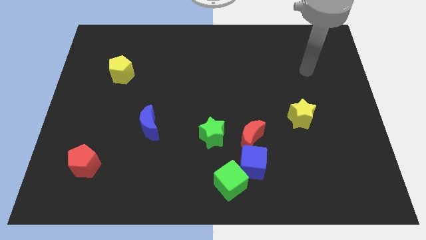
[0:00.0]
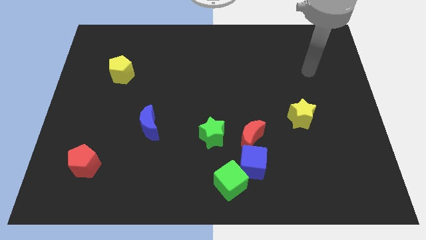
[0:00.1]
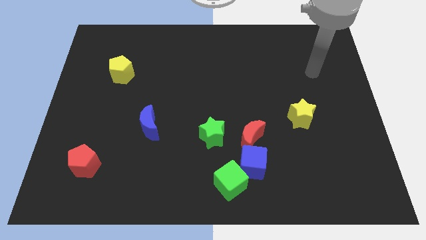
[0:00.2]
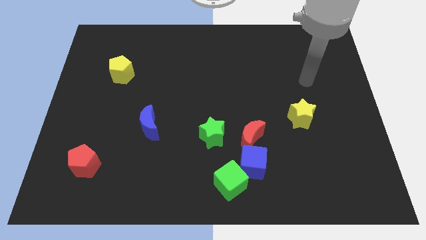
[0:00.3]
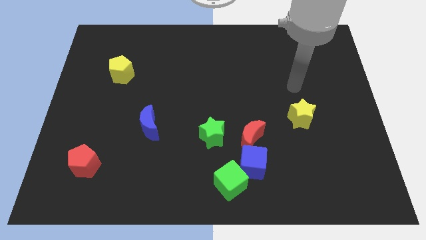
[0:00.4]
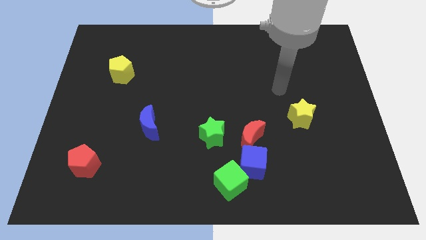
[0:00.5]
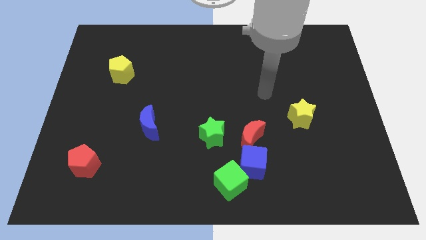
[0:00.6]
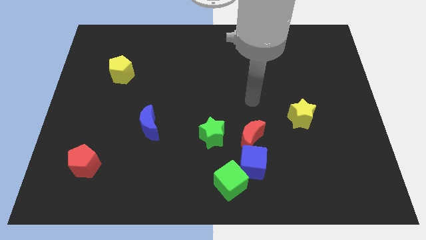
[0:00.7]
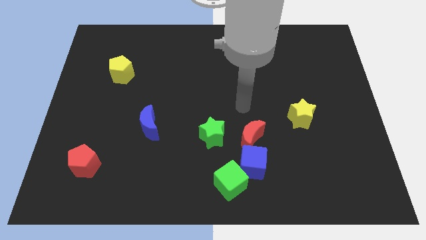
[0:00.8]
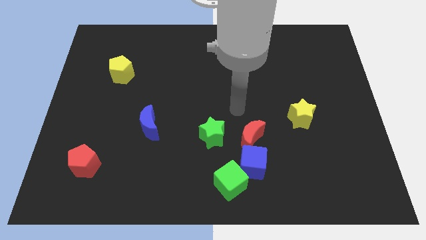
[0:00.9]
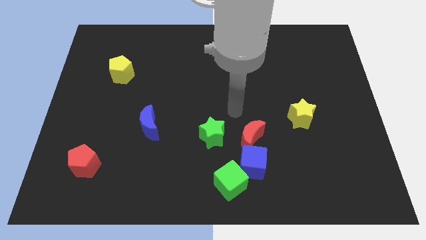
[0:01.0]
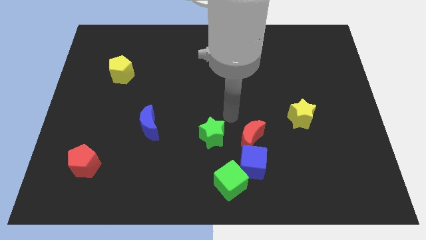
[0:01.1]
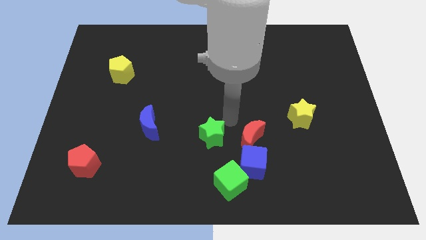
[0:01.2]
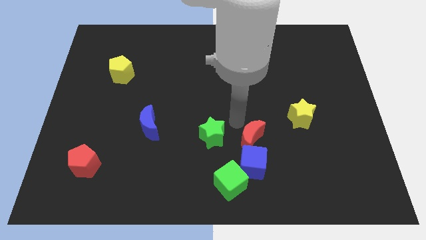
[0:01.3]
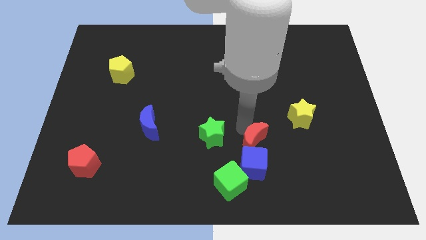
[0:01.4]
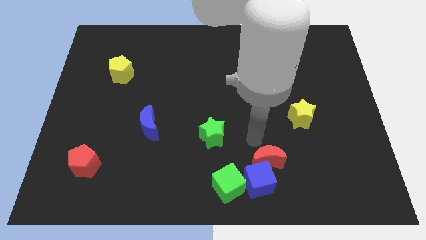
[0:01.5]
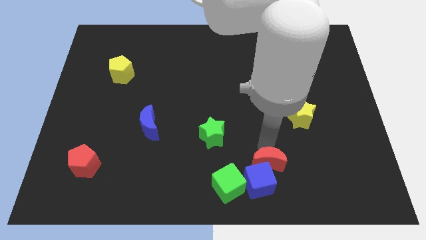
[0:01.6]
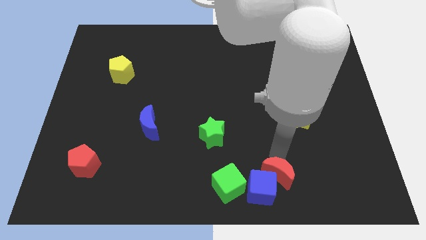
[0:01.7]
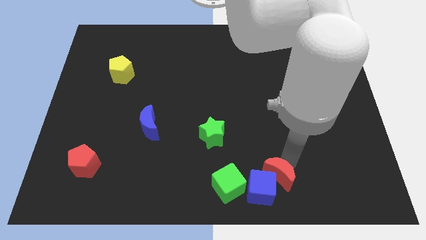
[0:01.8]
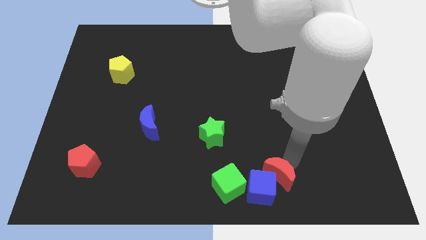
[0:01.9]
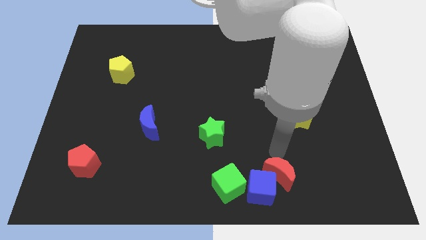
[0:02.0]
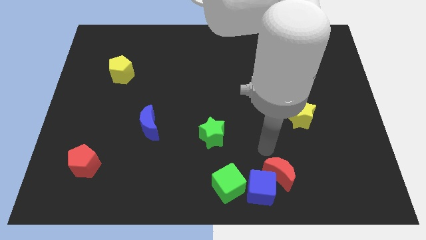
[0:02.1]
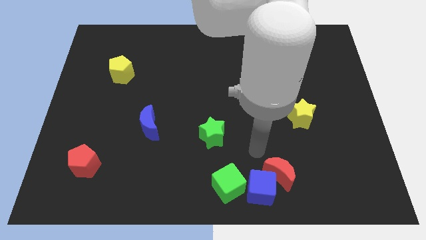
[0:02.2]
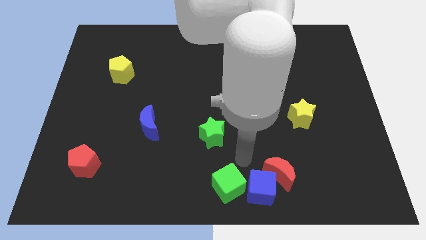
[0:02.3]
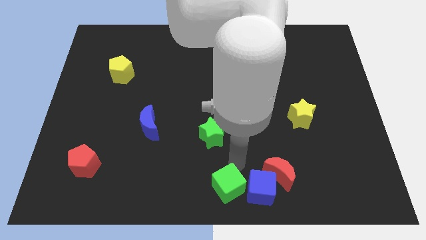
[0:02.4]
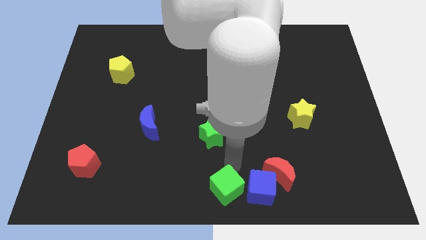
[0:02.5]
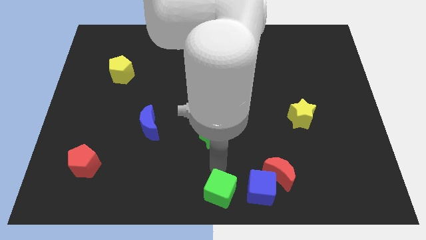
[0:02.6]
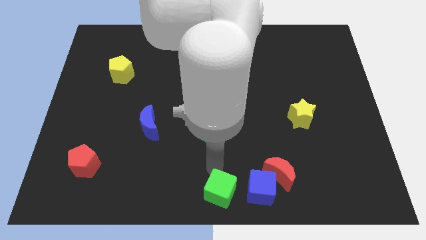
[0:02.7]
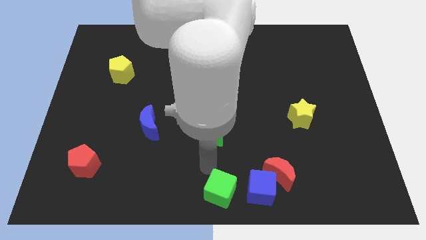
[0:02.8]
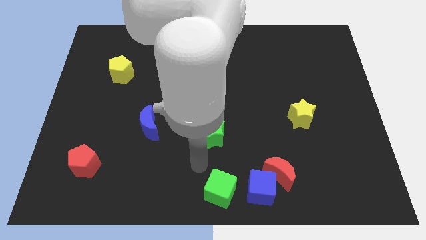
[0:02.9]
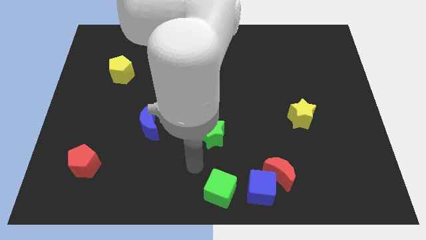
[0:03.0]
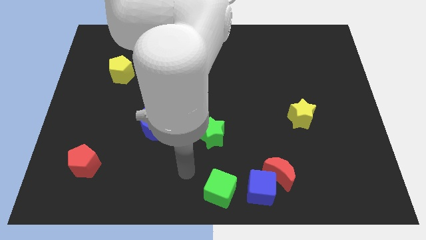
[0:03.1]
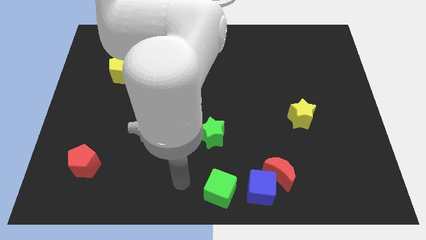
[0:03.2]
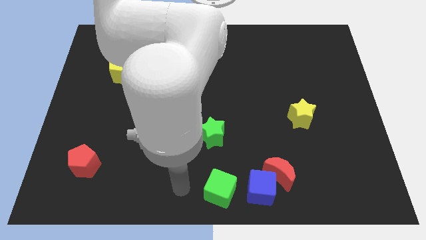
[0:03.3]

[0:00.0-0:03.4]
push the red moon into the blue cube

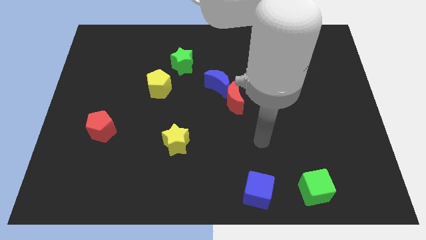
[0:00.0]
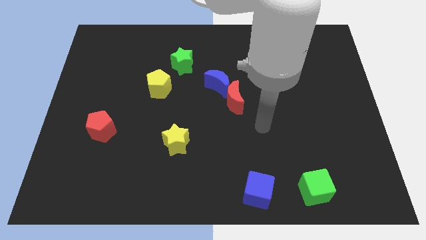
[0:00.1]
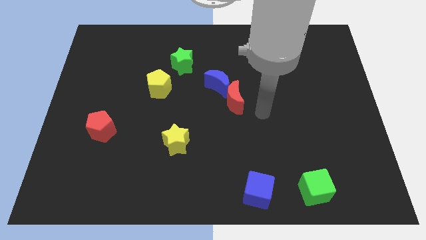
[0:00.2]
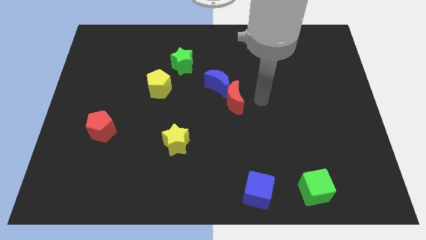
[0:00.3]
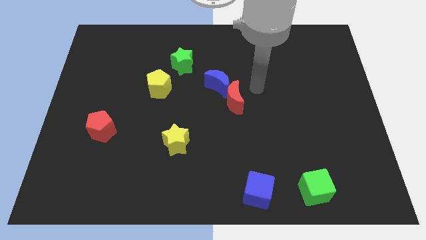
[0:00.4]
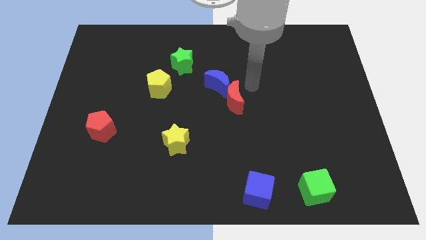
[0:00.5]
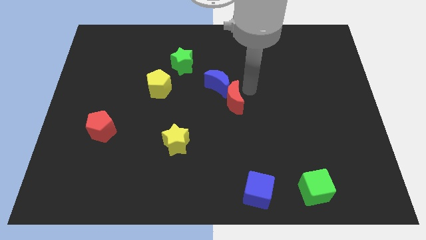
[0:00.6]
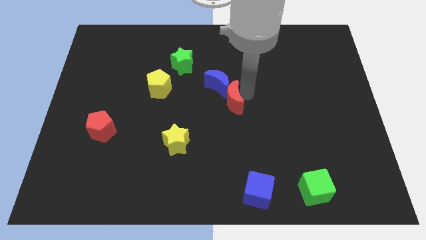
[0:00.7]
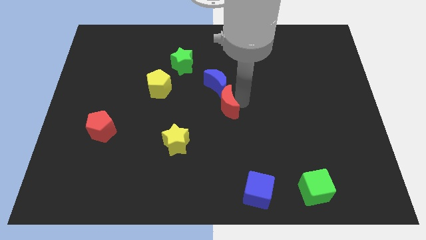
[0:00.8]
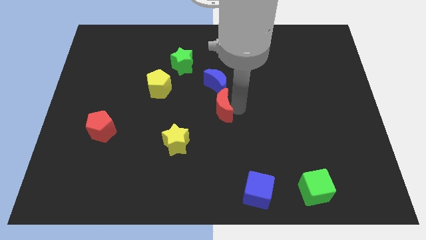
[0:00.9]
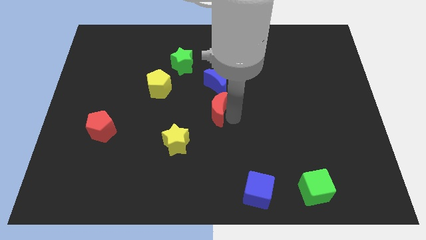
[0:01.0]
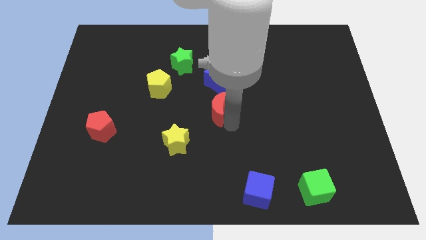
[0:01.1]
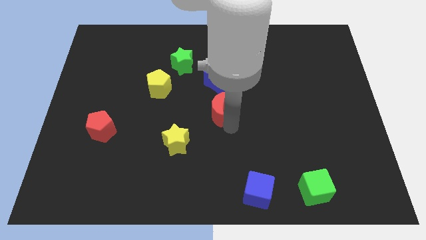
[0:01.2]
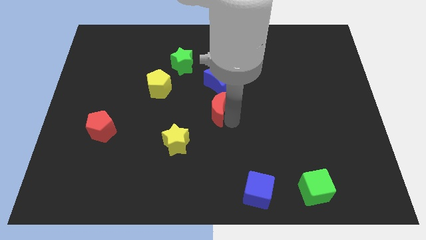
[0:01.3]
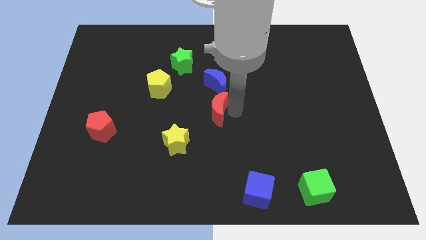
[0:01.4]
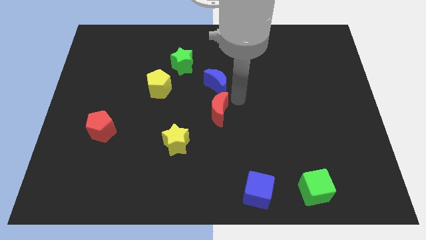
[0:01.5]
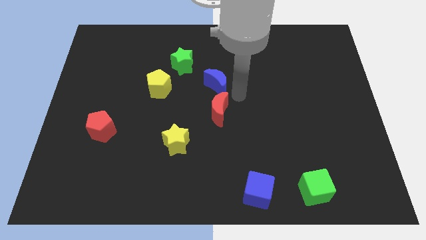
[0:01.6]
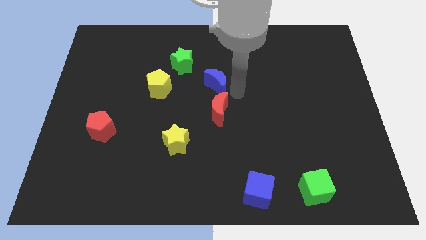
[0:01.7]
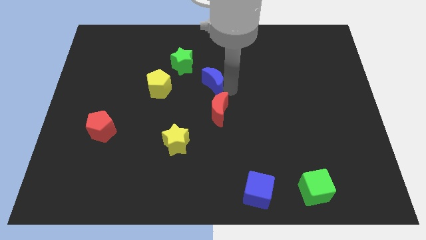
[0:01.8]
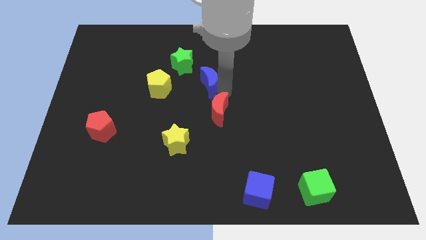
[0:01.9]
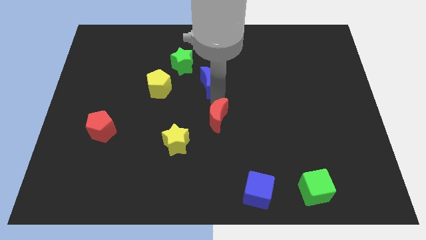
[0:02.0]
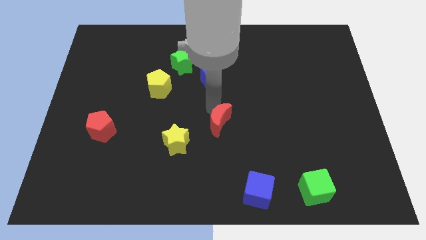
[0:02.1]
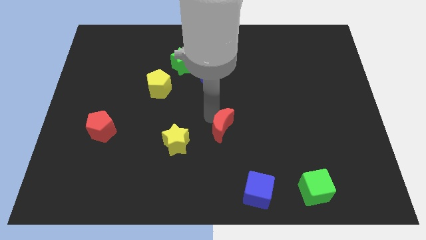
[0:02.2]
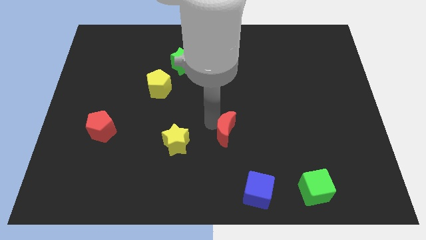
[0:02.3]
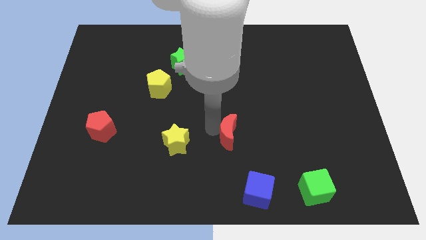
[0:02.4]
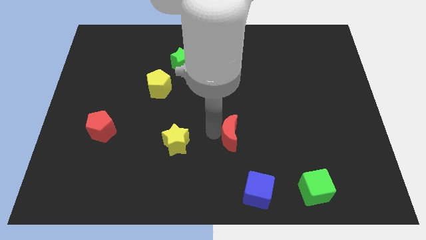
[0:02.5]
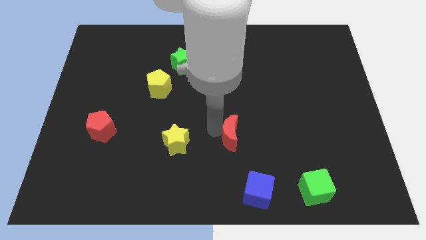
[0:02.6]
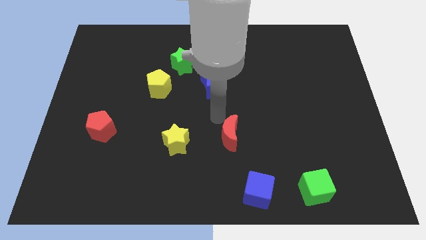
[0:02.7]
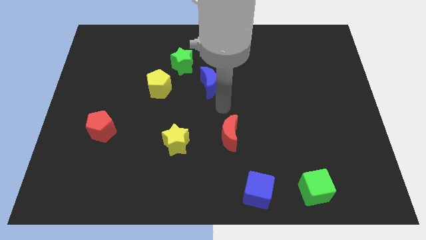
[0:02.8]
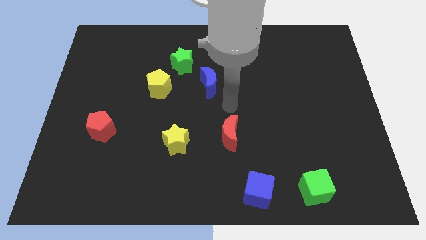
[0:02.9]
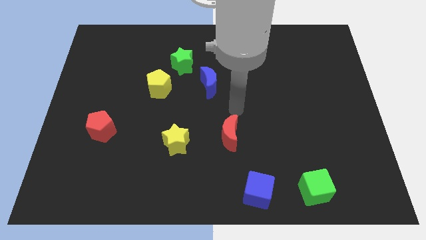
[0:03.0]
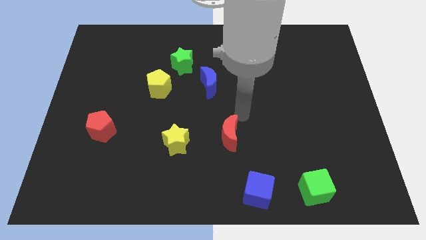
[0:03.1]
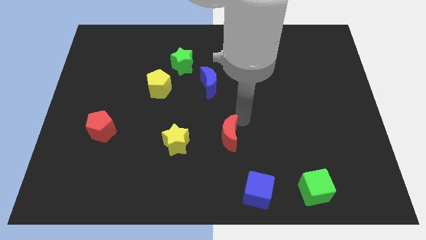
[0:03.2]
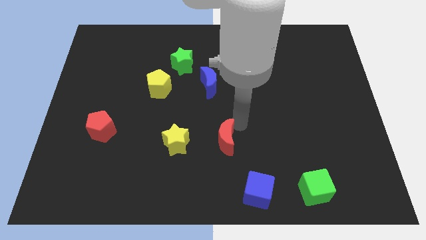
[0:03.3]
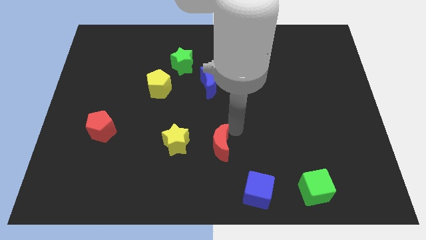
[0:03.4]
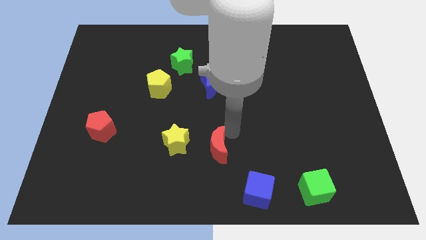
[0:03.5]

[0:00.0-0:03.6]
push the red crescent to the right of the yellow star

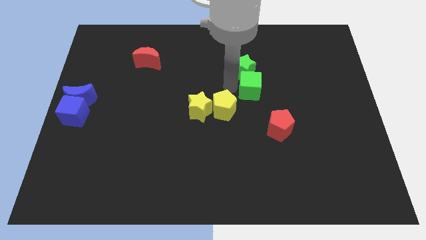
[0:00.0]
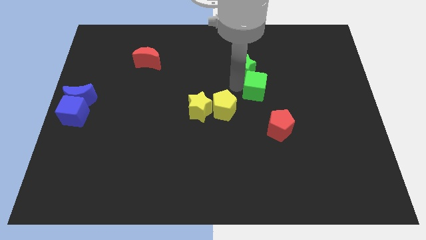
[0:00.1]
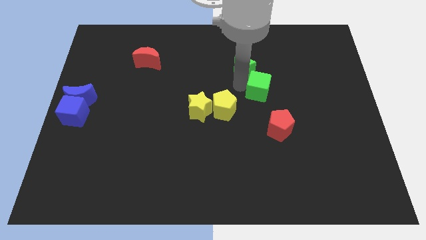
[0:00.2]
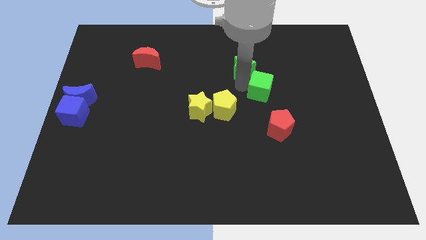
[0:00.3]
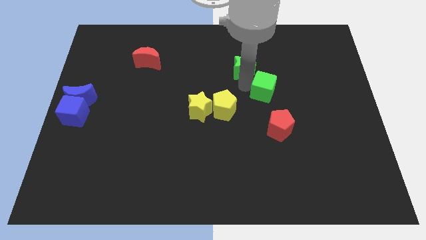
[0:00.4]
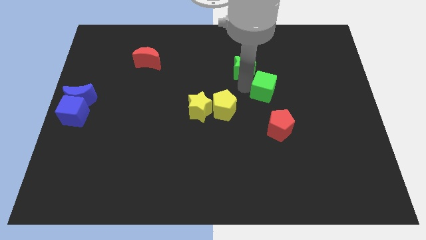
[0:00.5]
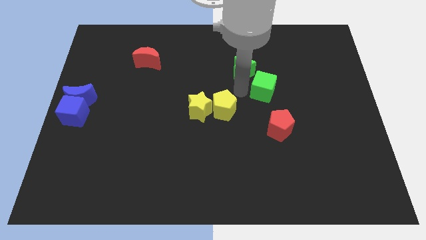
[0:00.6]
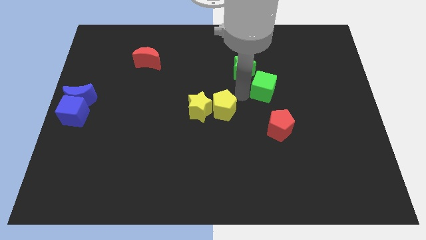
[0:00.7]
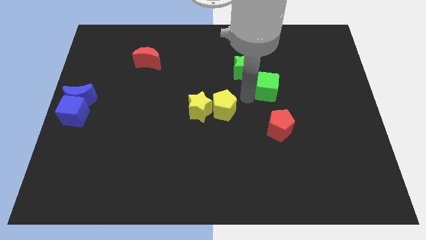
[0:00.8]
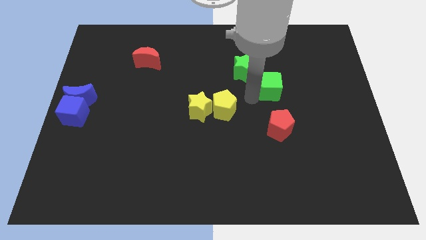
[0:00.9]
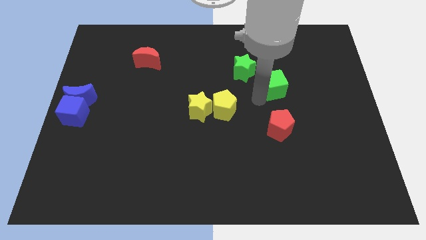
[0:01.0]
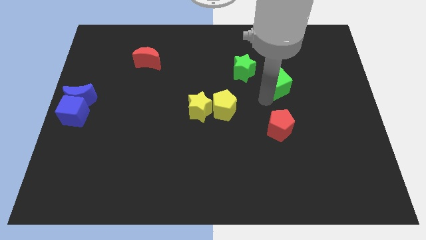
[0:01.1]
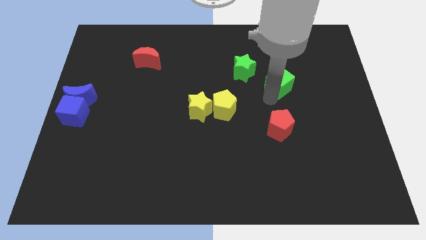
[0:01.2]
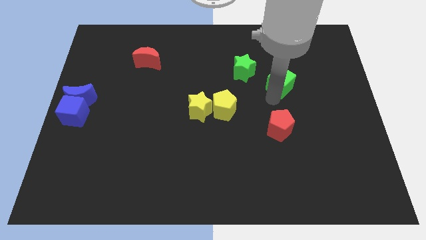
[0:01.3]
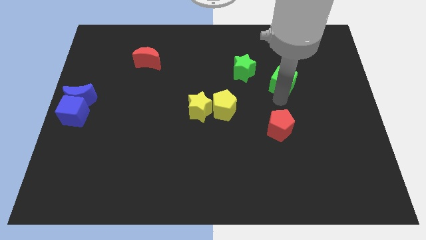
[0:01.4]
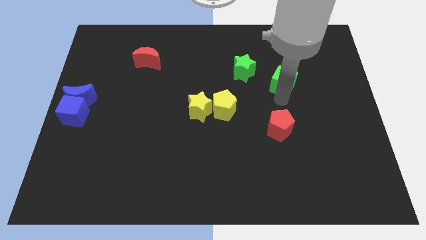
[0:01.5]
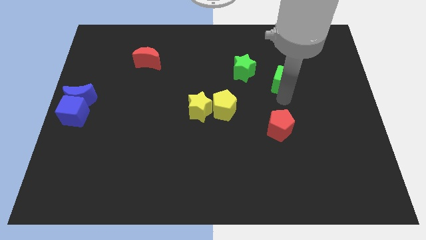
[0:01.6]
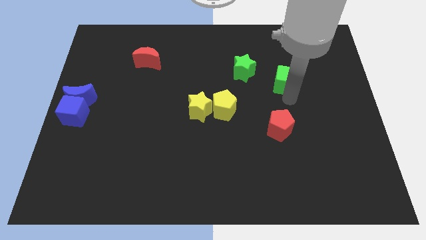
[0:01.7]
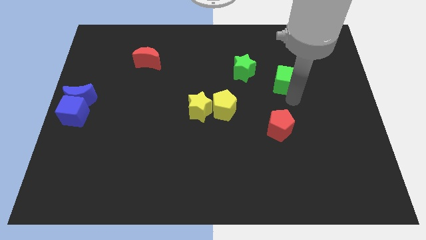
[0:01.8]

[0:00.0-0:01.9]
separate the green cube from the green star

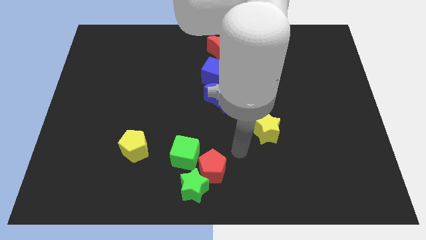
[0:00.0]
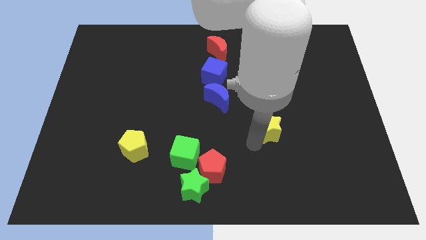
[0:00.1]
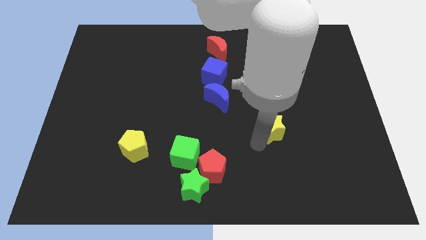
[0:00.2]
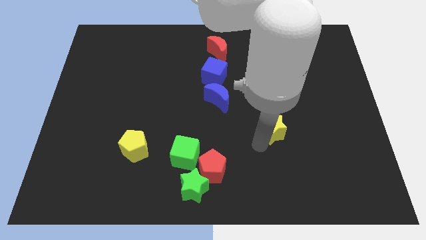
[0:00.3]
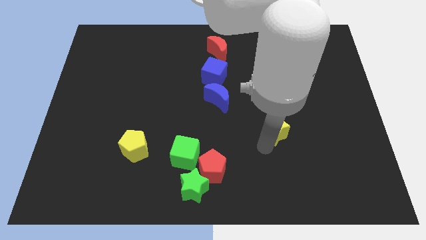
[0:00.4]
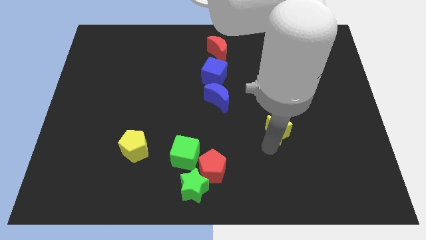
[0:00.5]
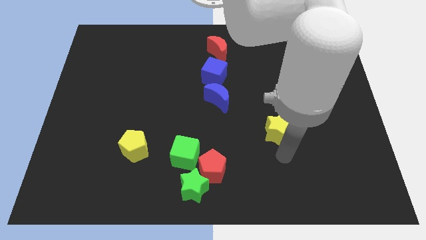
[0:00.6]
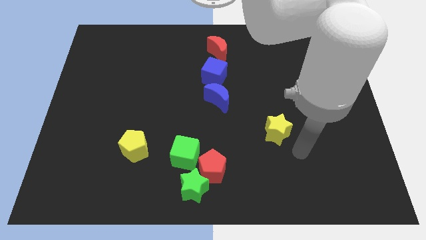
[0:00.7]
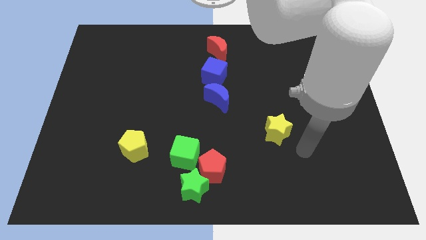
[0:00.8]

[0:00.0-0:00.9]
slightly touch the yellow star
